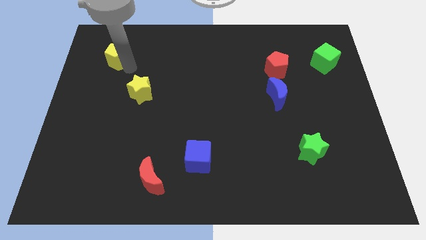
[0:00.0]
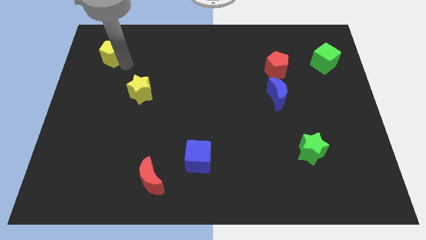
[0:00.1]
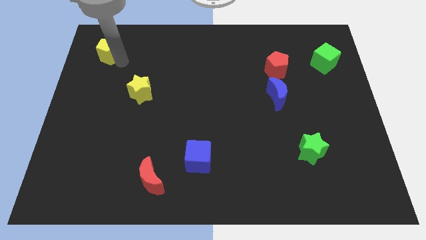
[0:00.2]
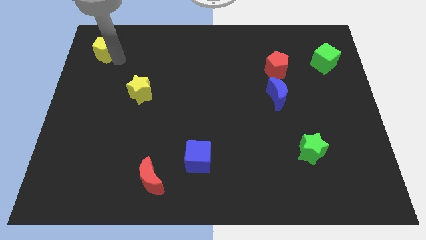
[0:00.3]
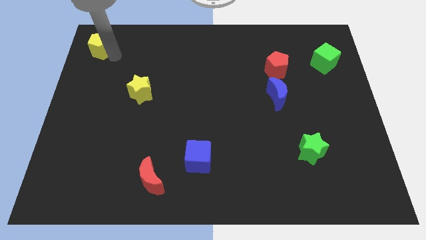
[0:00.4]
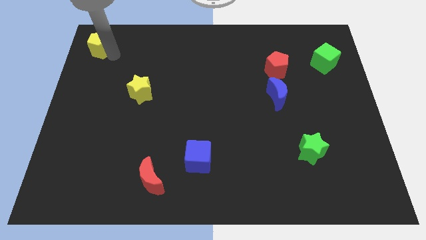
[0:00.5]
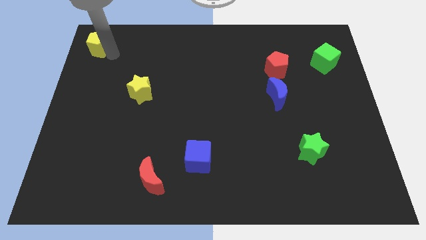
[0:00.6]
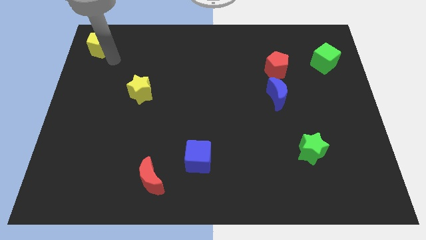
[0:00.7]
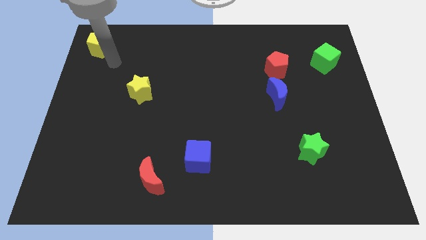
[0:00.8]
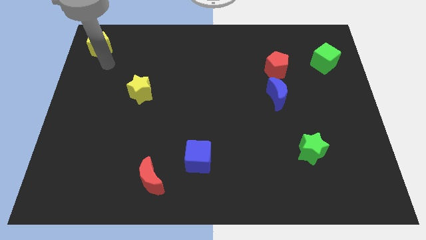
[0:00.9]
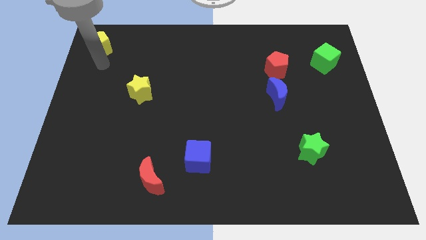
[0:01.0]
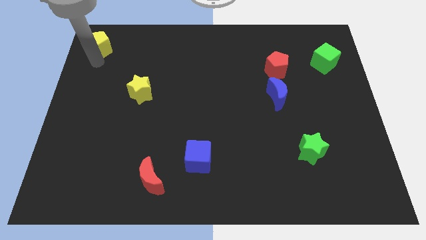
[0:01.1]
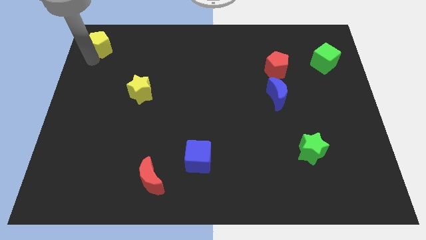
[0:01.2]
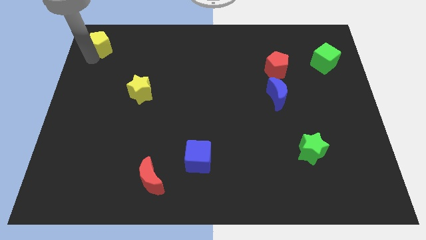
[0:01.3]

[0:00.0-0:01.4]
push the yellow pentagon towards the top left corner of the board

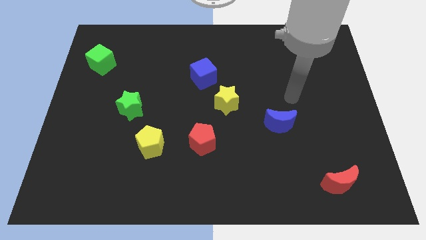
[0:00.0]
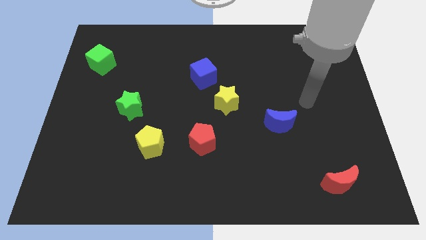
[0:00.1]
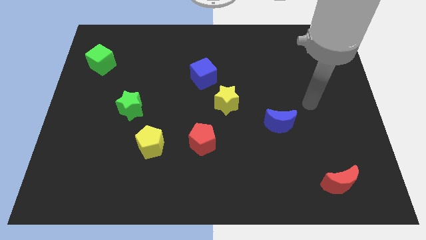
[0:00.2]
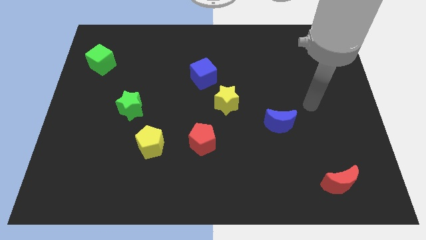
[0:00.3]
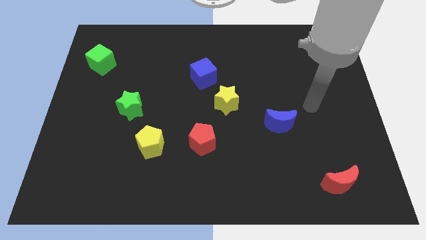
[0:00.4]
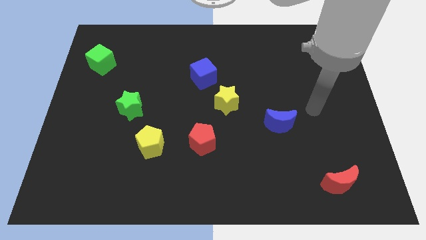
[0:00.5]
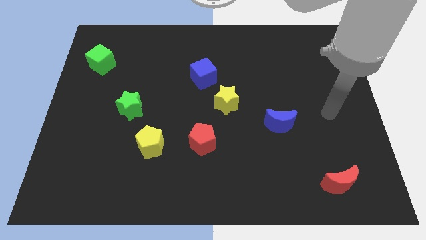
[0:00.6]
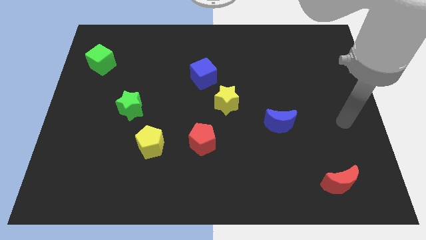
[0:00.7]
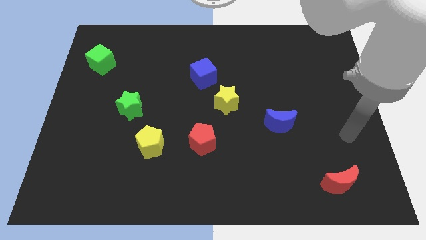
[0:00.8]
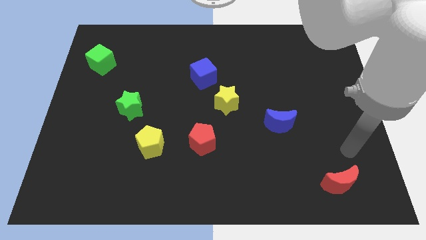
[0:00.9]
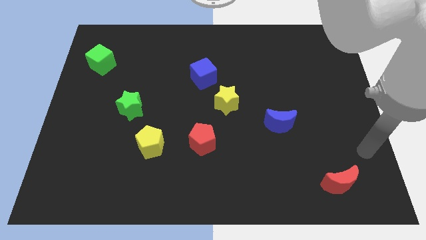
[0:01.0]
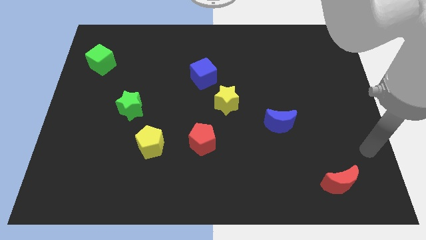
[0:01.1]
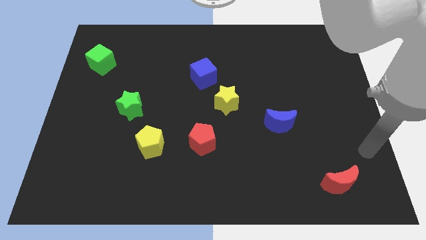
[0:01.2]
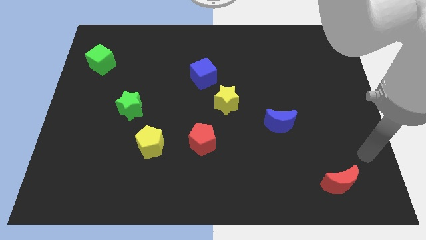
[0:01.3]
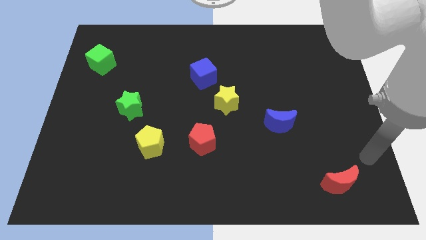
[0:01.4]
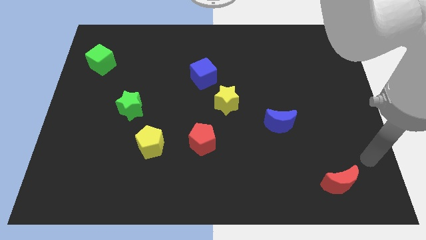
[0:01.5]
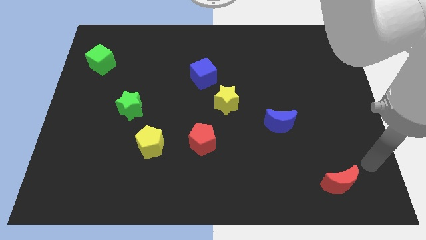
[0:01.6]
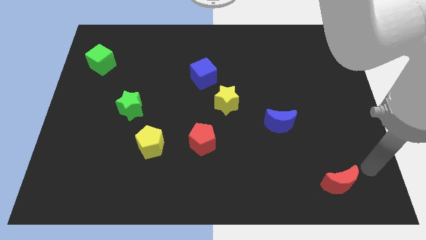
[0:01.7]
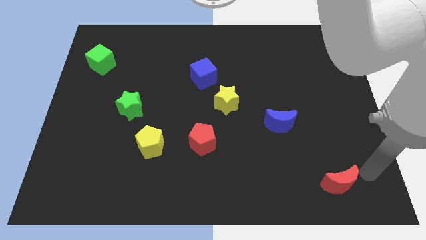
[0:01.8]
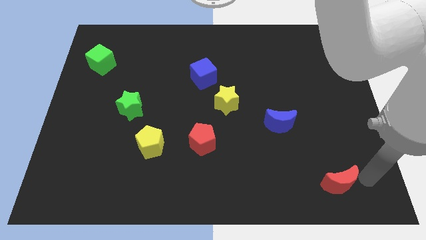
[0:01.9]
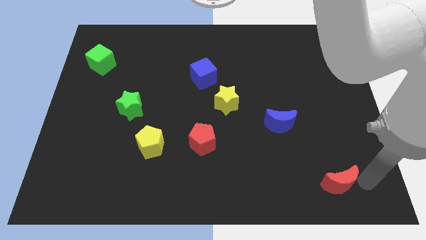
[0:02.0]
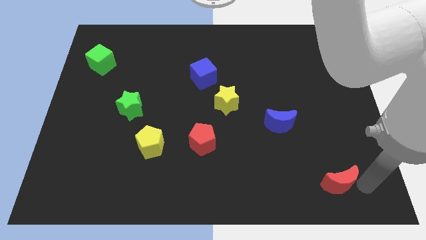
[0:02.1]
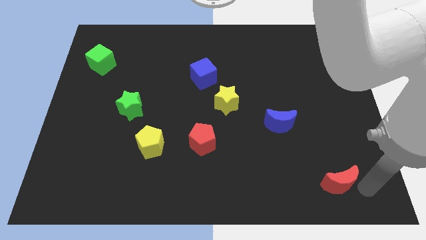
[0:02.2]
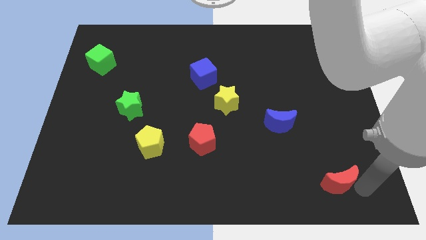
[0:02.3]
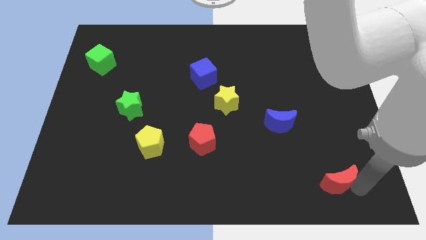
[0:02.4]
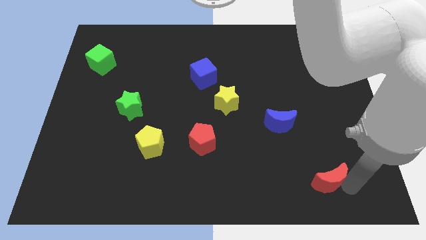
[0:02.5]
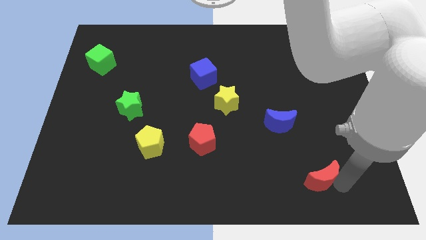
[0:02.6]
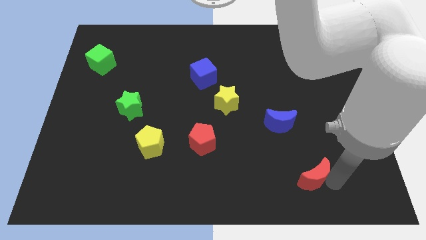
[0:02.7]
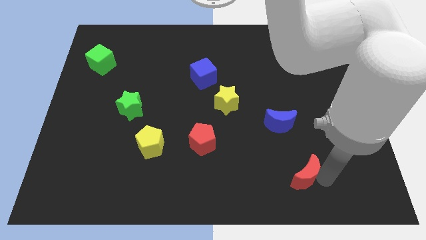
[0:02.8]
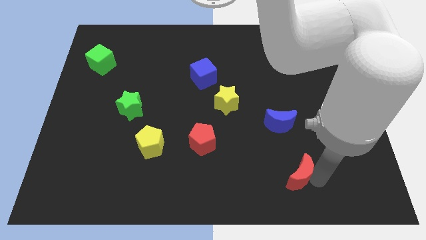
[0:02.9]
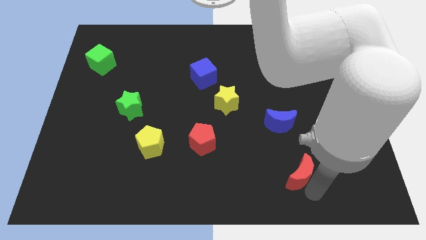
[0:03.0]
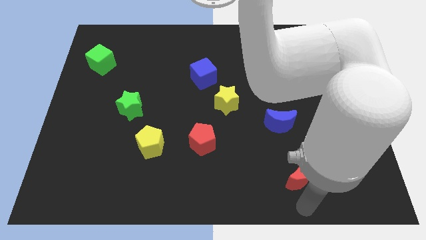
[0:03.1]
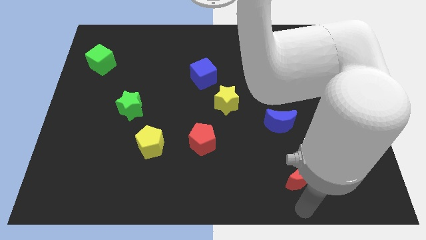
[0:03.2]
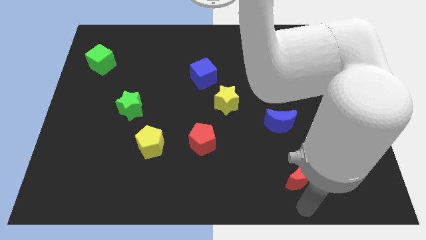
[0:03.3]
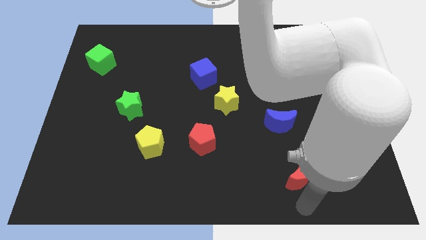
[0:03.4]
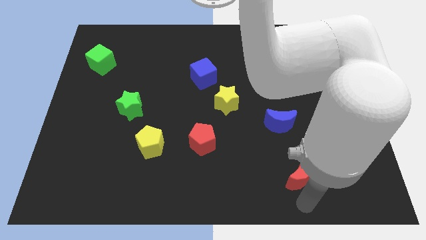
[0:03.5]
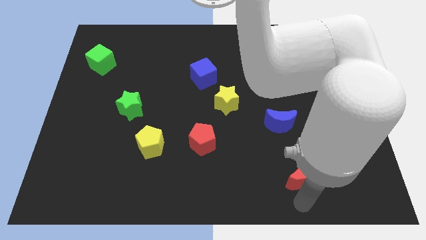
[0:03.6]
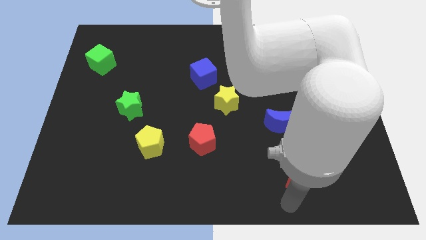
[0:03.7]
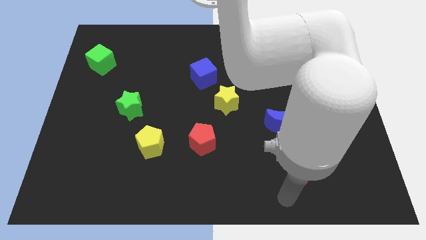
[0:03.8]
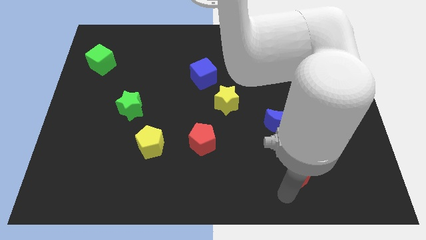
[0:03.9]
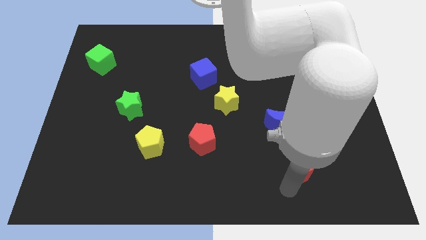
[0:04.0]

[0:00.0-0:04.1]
place the red moon below the blue moon

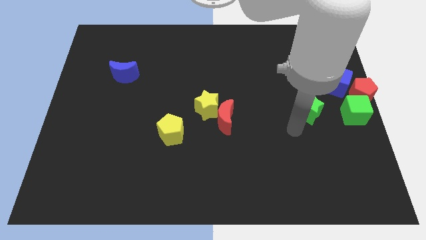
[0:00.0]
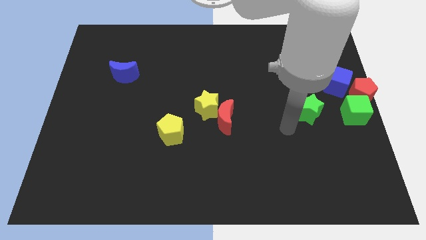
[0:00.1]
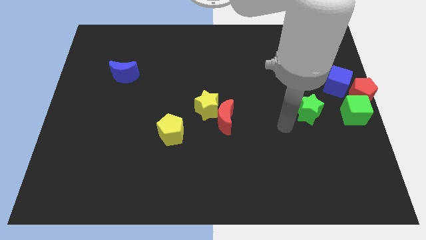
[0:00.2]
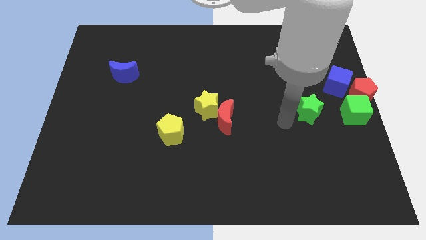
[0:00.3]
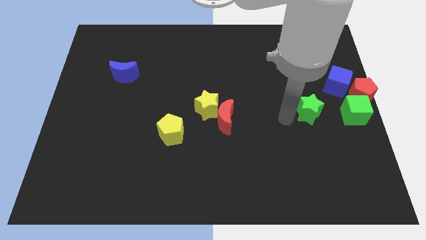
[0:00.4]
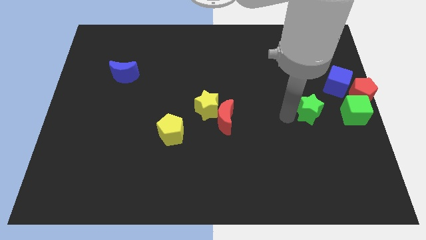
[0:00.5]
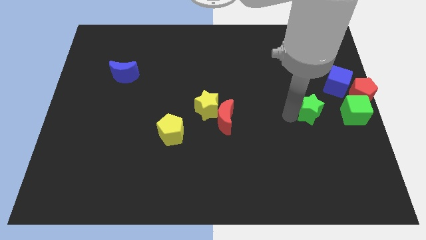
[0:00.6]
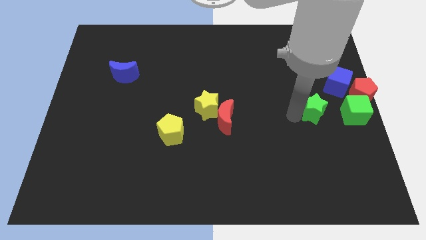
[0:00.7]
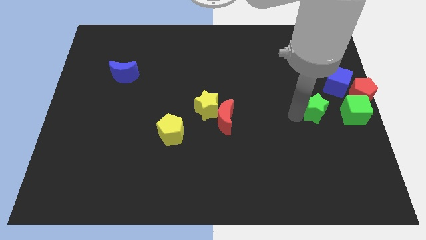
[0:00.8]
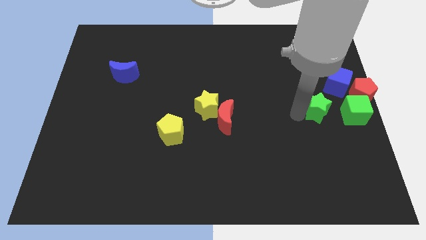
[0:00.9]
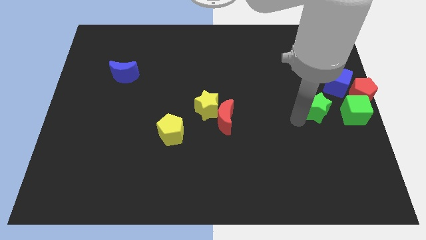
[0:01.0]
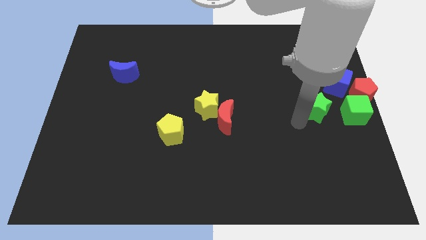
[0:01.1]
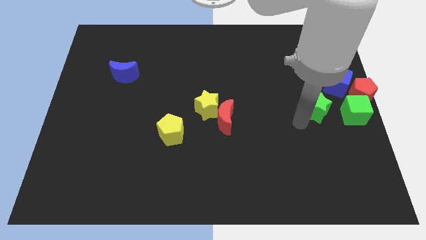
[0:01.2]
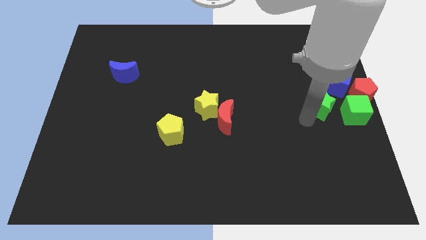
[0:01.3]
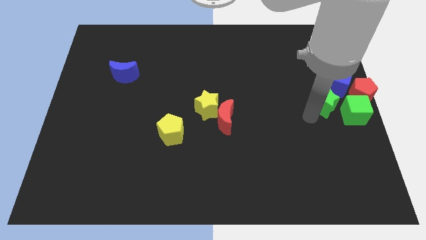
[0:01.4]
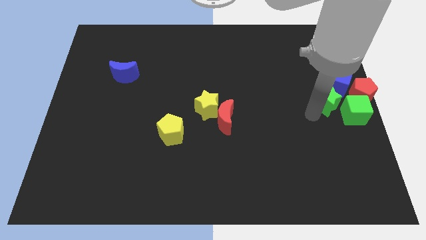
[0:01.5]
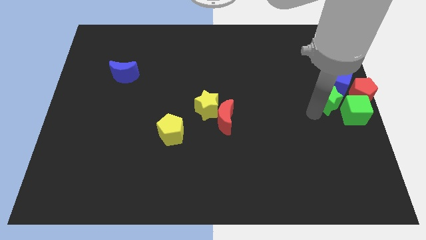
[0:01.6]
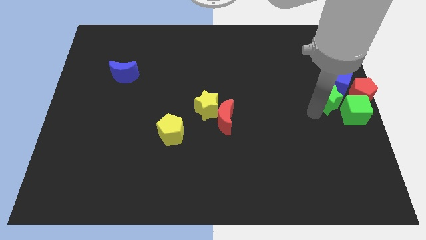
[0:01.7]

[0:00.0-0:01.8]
push green star into group of blocks

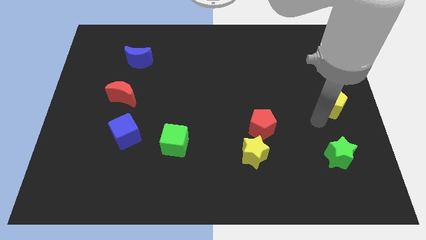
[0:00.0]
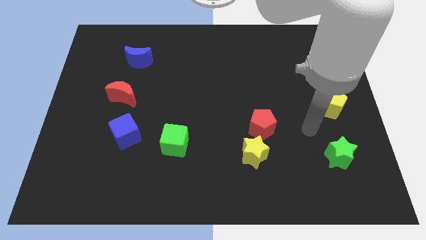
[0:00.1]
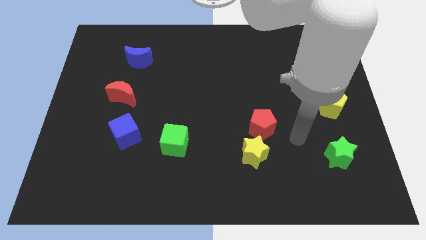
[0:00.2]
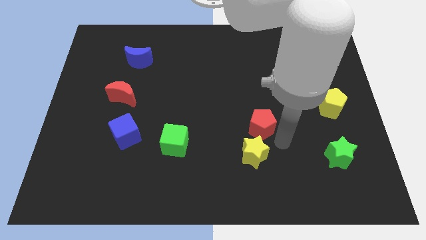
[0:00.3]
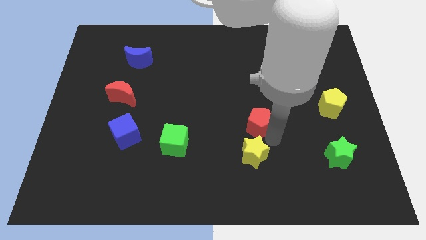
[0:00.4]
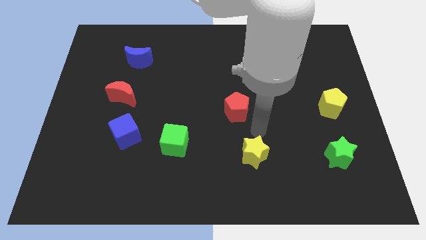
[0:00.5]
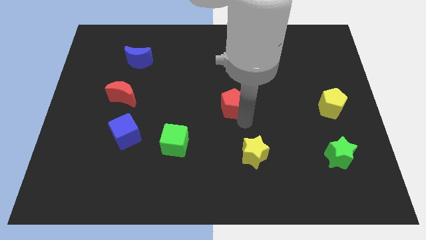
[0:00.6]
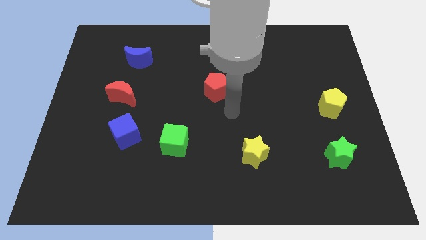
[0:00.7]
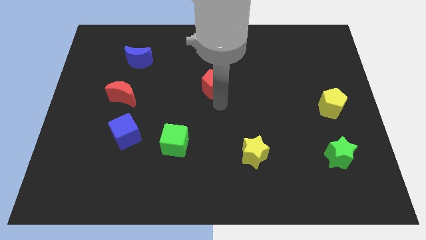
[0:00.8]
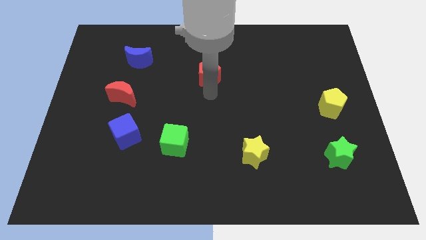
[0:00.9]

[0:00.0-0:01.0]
separate red pentagon from yellow star

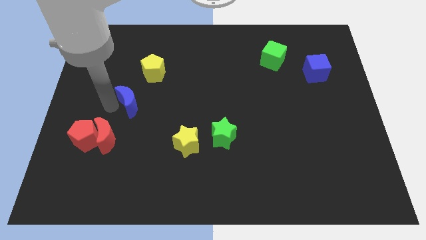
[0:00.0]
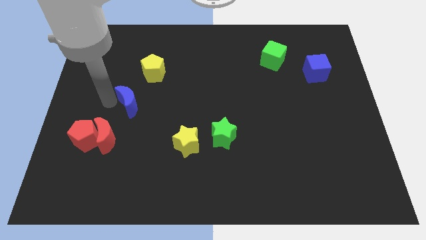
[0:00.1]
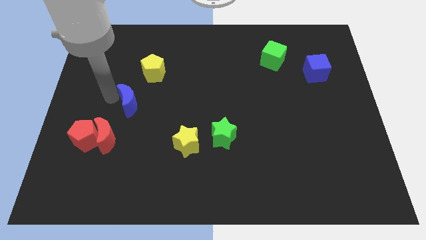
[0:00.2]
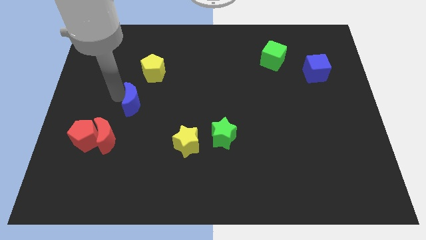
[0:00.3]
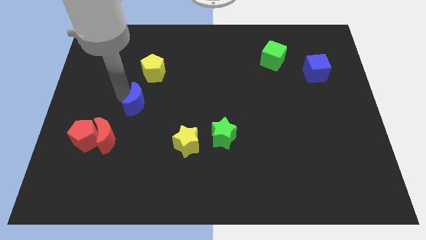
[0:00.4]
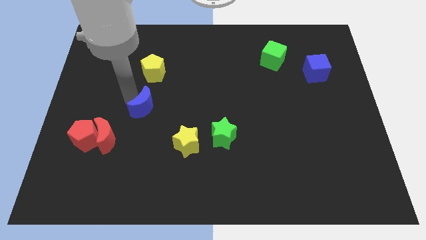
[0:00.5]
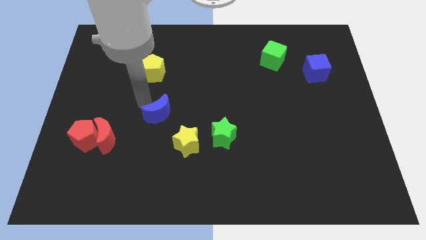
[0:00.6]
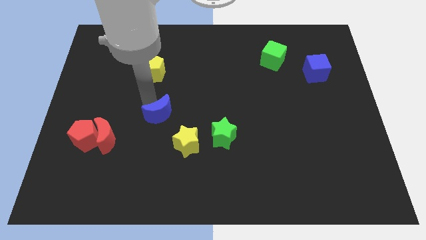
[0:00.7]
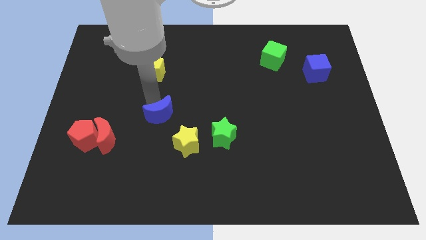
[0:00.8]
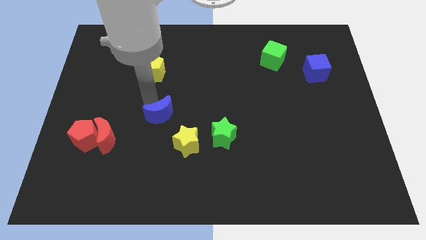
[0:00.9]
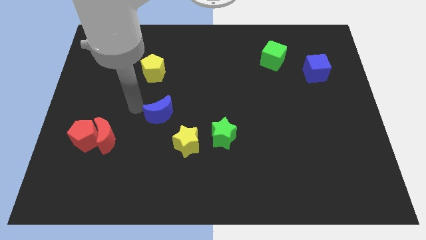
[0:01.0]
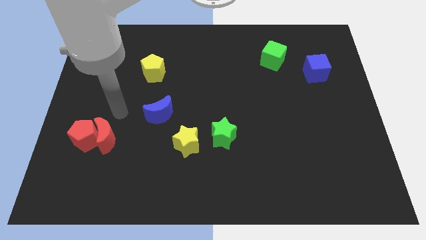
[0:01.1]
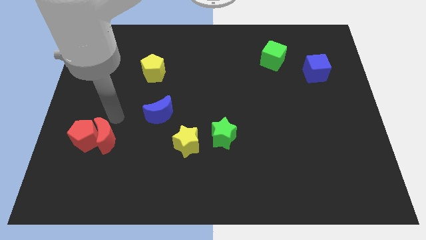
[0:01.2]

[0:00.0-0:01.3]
push blue crescent slightly right side
